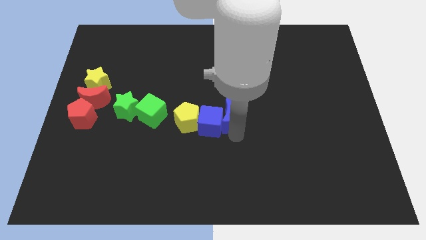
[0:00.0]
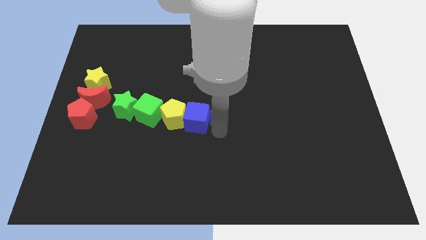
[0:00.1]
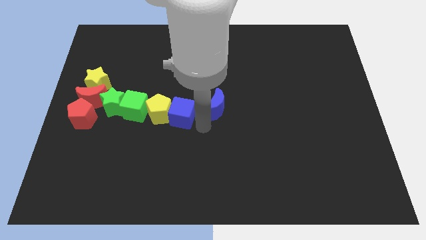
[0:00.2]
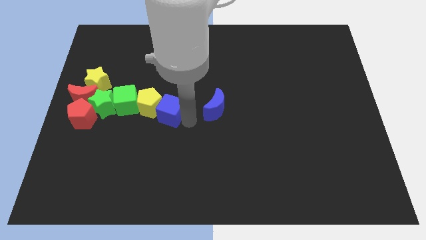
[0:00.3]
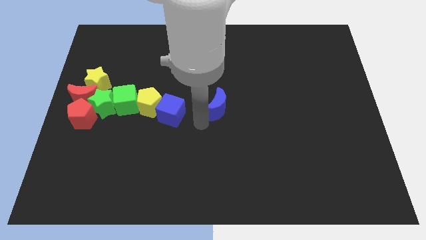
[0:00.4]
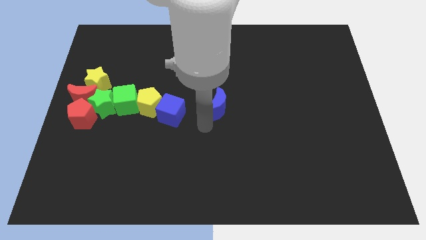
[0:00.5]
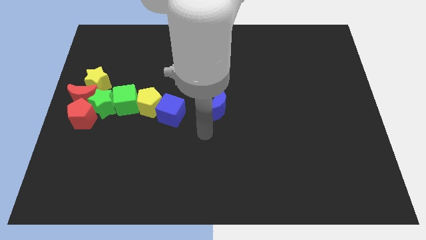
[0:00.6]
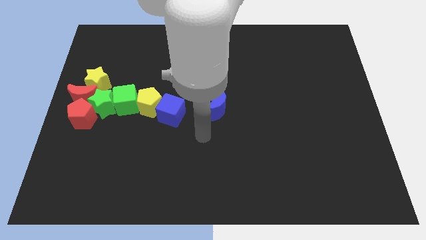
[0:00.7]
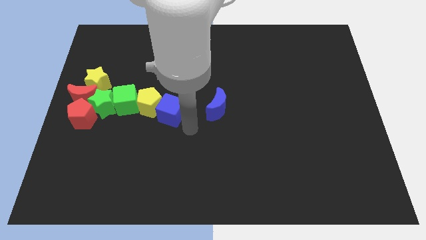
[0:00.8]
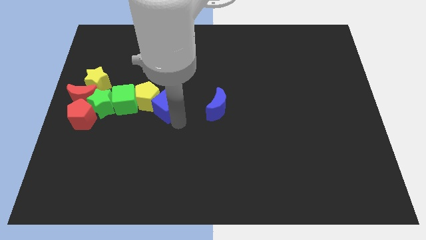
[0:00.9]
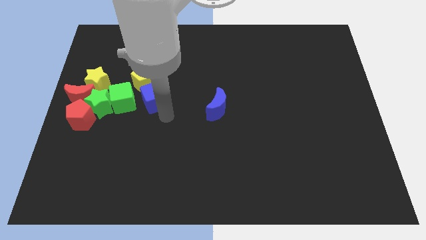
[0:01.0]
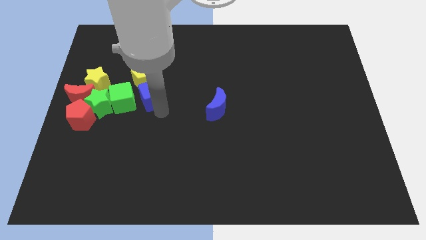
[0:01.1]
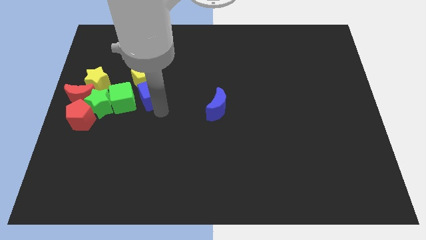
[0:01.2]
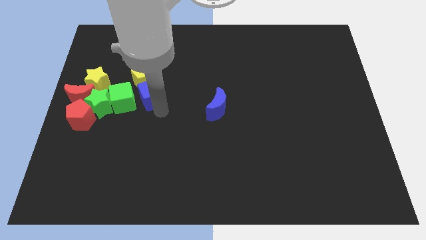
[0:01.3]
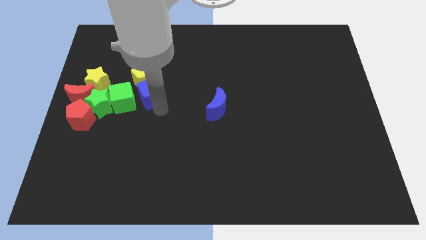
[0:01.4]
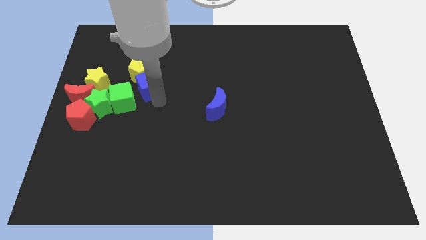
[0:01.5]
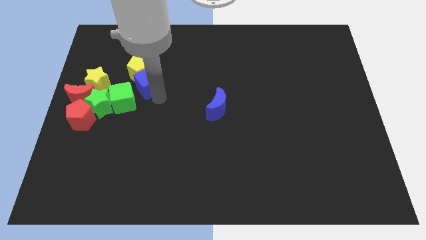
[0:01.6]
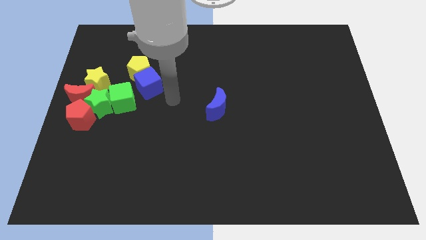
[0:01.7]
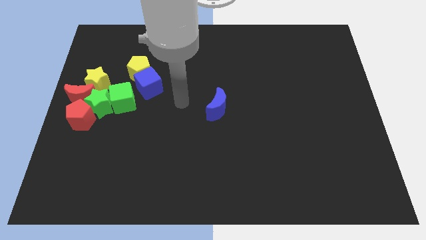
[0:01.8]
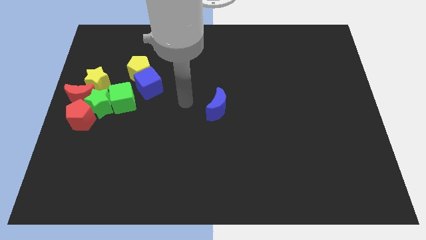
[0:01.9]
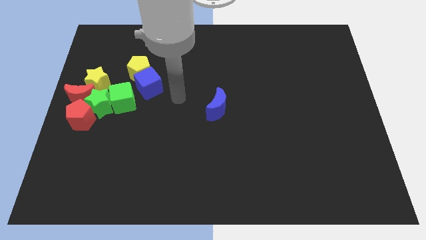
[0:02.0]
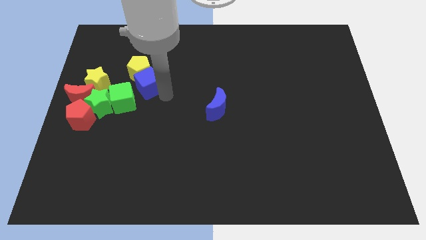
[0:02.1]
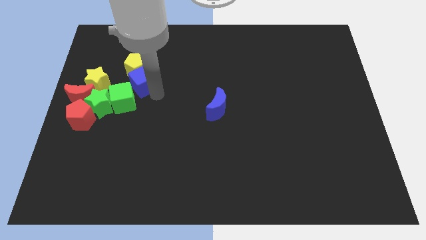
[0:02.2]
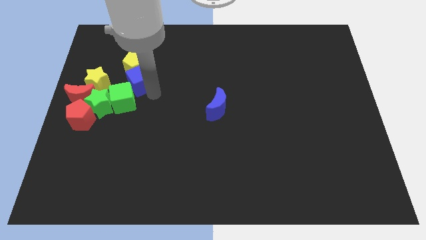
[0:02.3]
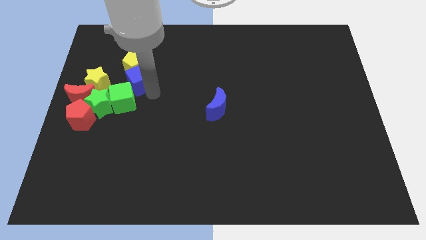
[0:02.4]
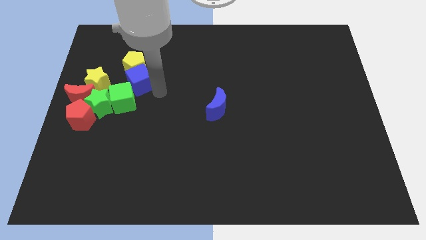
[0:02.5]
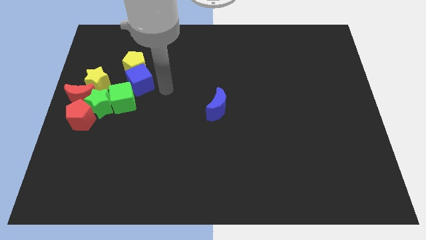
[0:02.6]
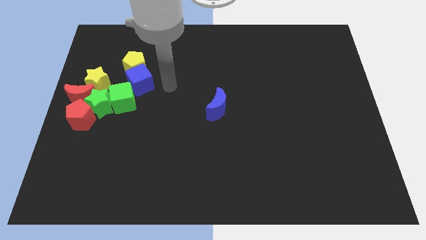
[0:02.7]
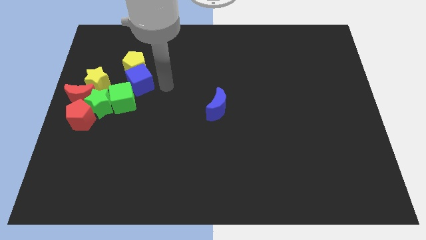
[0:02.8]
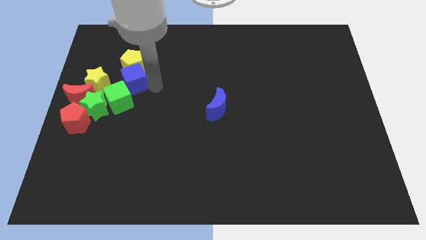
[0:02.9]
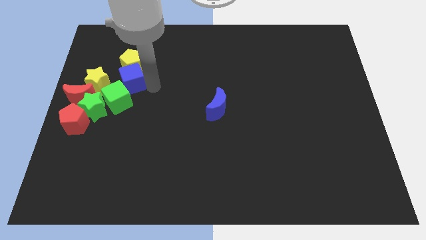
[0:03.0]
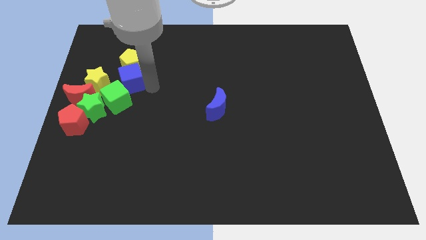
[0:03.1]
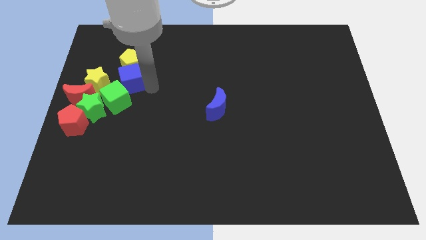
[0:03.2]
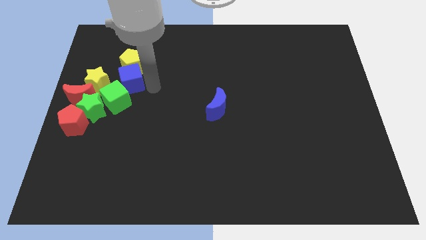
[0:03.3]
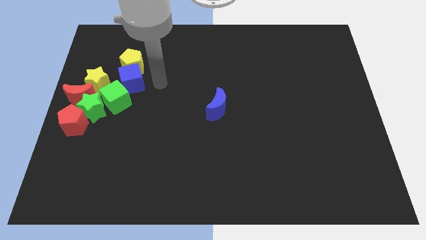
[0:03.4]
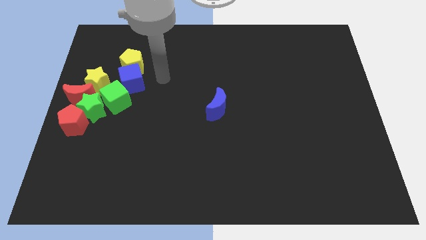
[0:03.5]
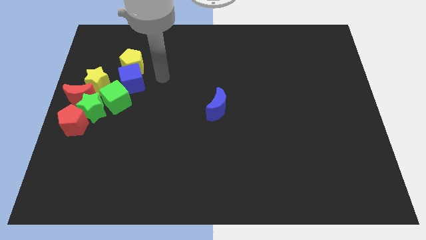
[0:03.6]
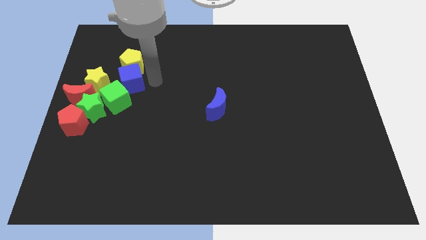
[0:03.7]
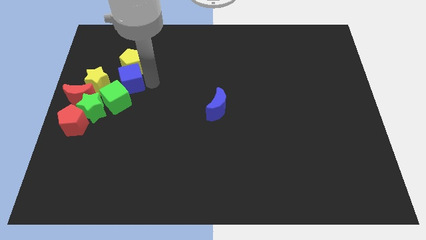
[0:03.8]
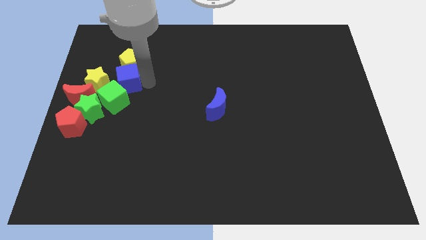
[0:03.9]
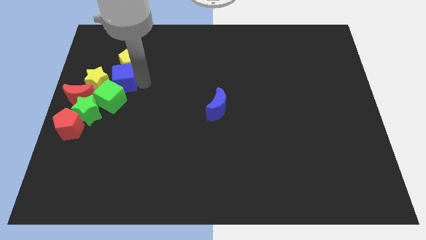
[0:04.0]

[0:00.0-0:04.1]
push the blue cube into the yellow pentagon towards the top left

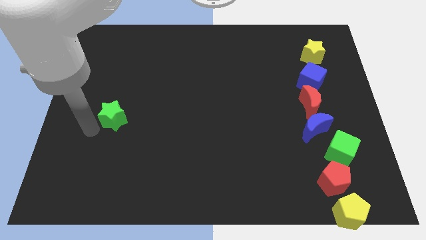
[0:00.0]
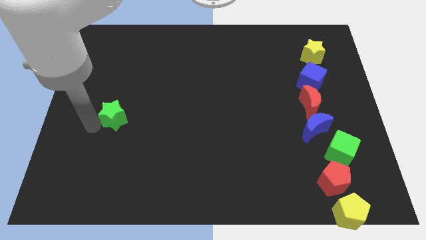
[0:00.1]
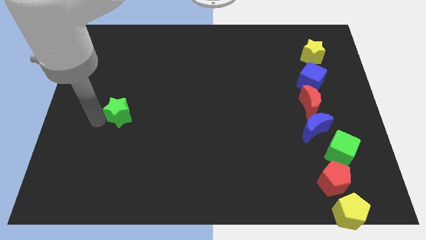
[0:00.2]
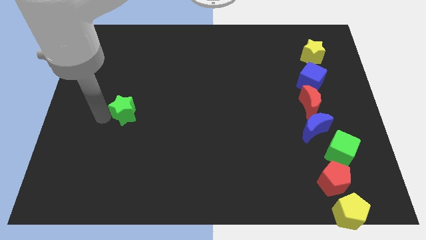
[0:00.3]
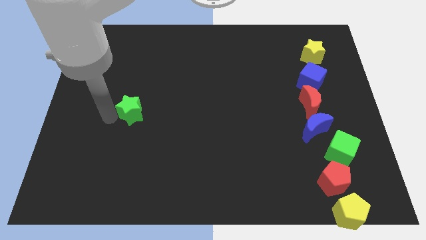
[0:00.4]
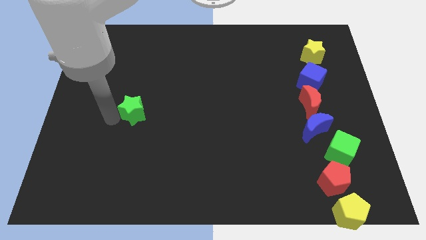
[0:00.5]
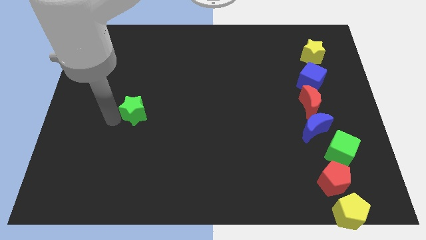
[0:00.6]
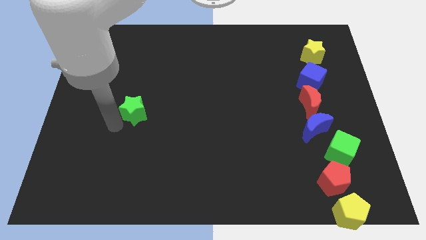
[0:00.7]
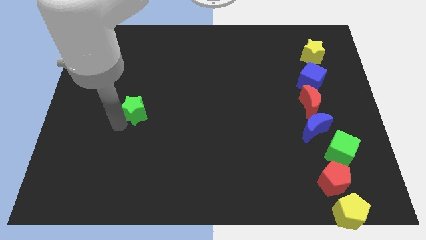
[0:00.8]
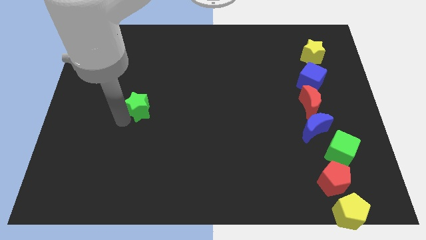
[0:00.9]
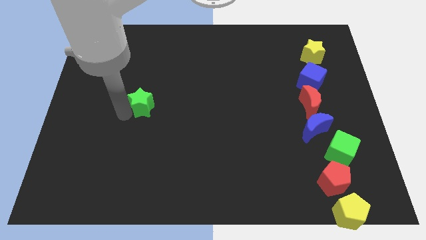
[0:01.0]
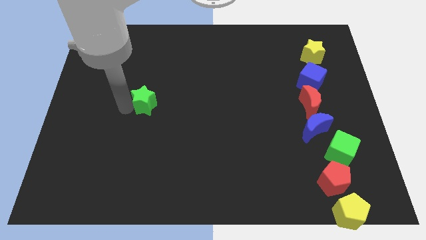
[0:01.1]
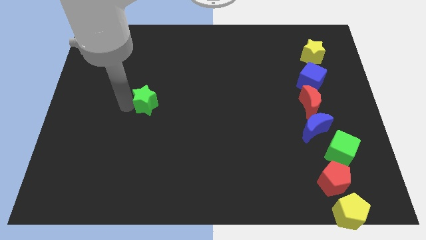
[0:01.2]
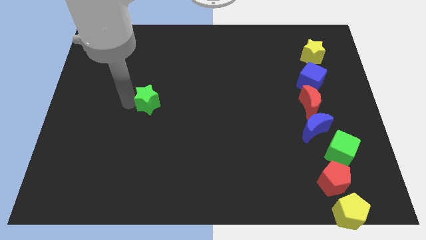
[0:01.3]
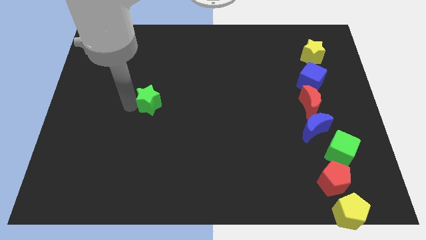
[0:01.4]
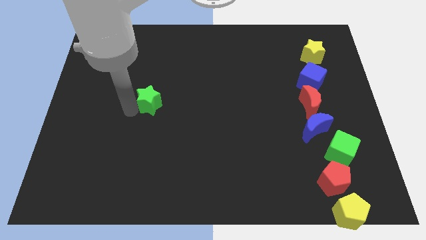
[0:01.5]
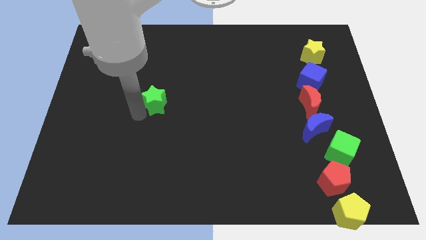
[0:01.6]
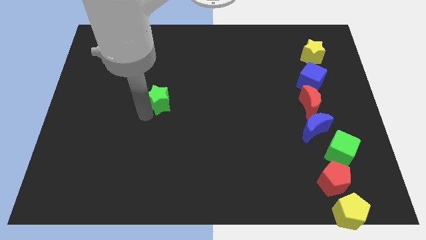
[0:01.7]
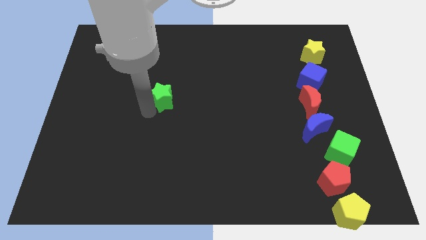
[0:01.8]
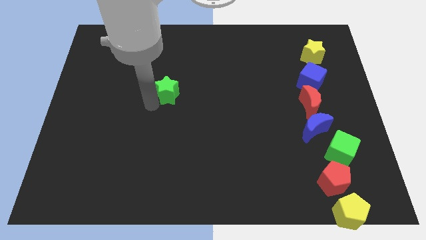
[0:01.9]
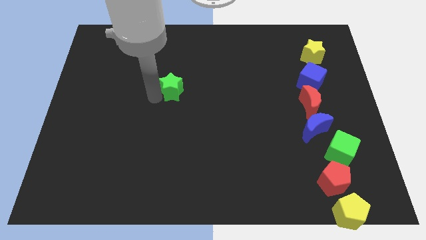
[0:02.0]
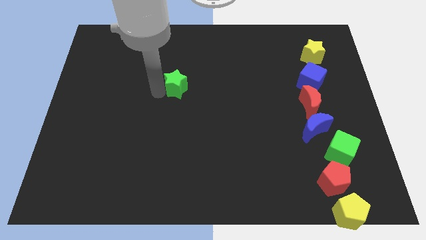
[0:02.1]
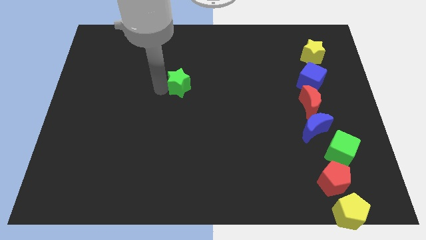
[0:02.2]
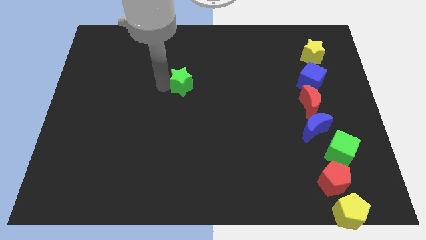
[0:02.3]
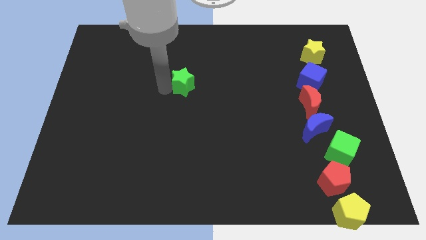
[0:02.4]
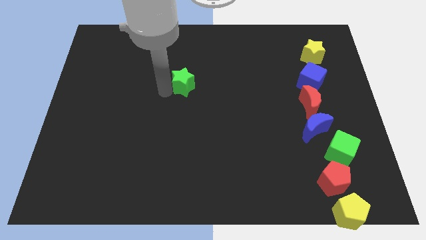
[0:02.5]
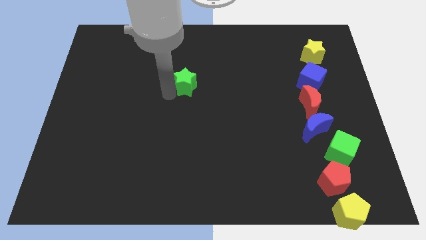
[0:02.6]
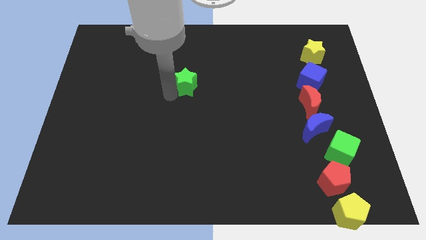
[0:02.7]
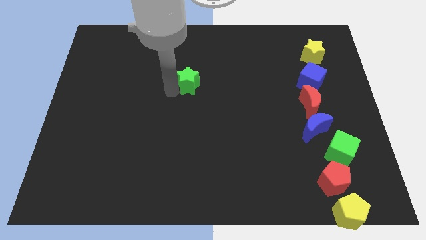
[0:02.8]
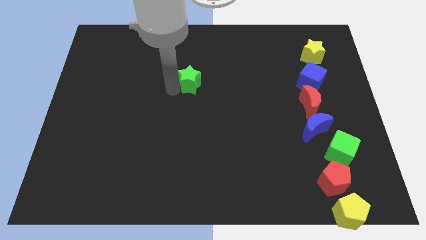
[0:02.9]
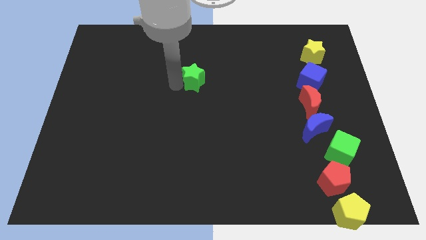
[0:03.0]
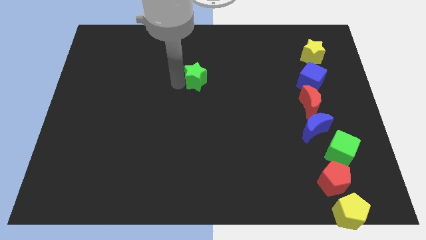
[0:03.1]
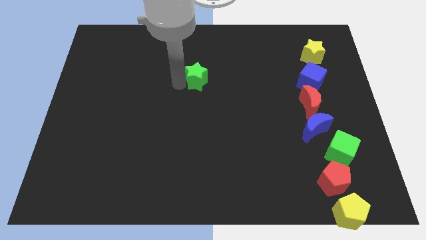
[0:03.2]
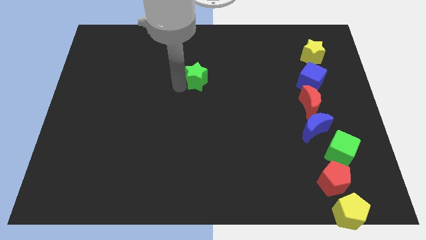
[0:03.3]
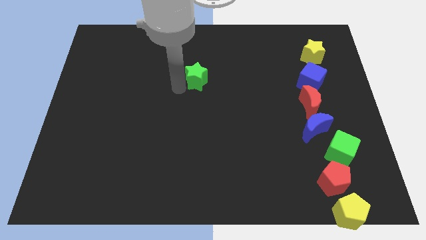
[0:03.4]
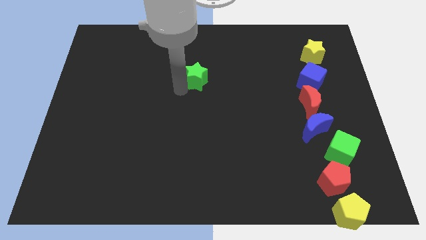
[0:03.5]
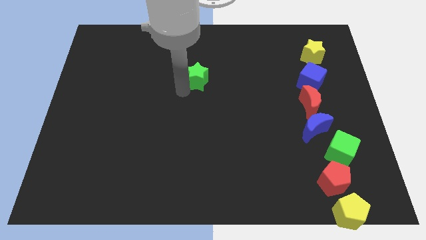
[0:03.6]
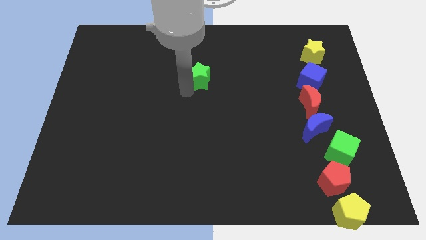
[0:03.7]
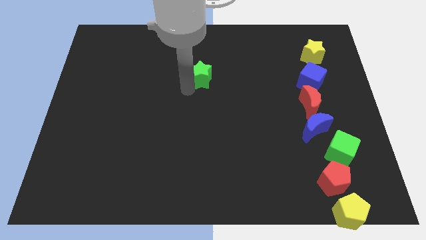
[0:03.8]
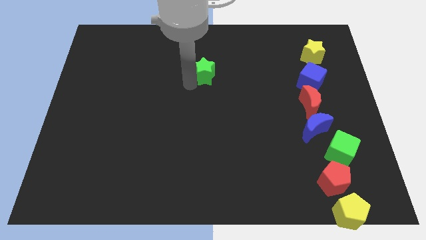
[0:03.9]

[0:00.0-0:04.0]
move the green star to the left of the blue cube

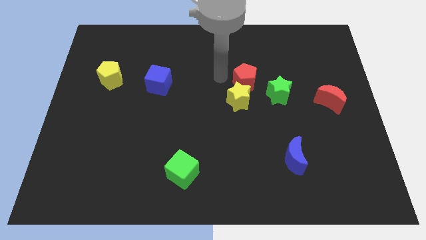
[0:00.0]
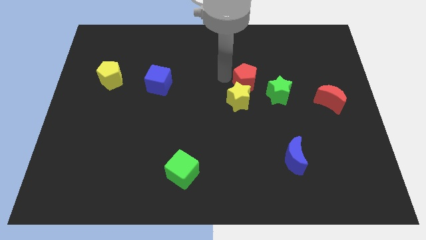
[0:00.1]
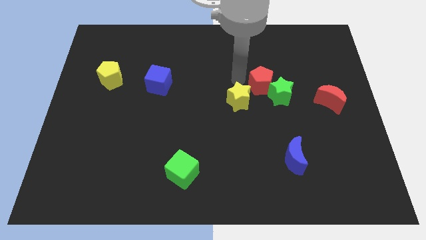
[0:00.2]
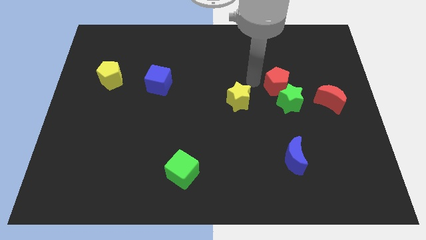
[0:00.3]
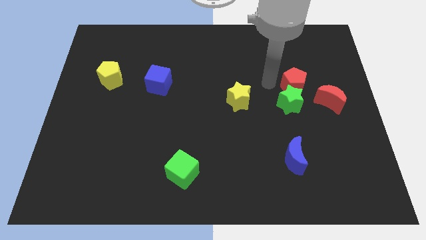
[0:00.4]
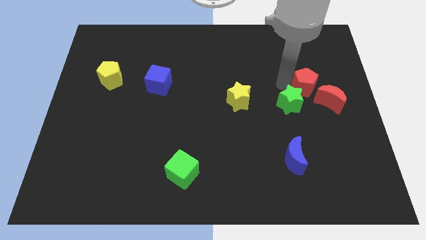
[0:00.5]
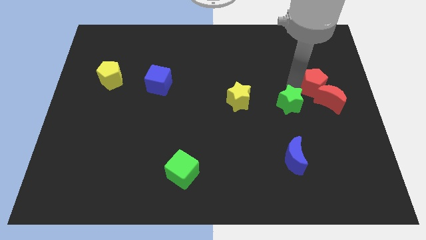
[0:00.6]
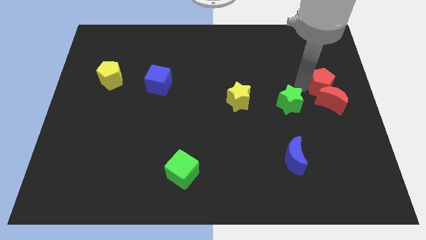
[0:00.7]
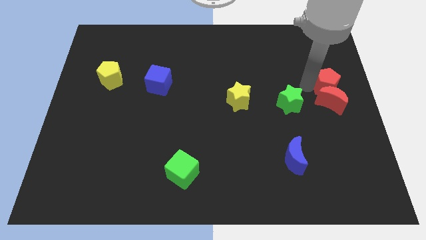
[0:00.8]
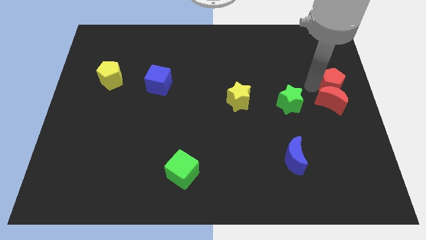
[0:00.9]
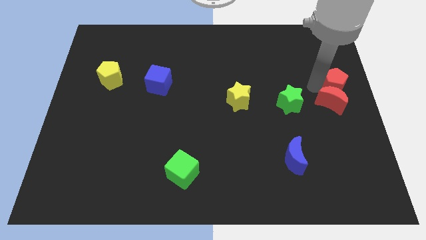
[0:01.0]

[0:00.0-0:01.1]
push red pentagon on top of red moon
